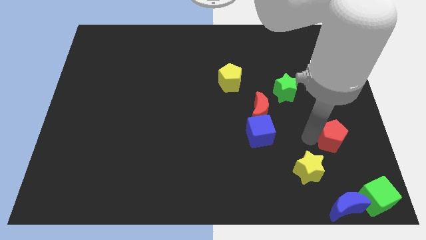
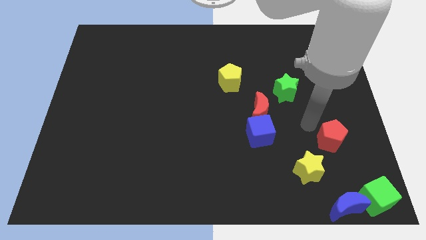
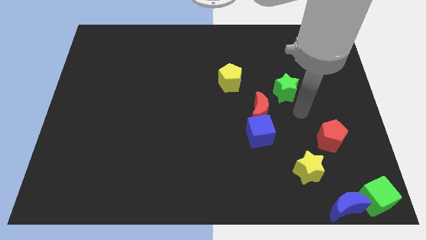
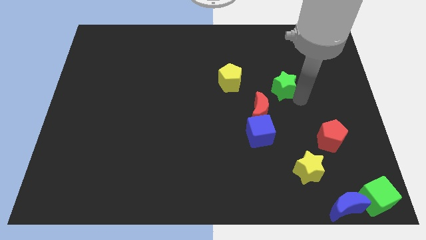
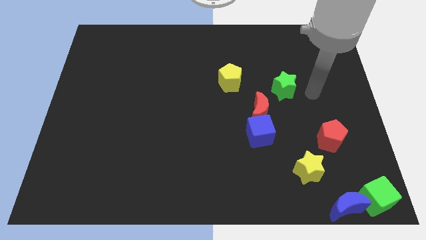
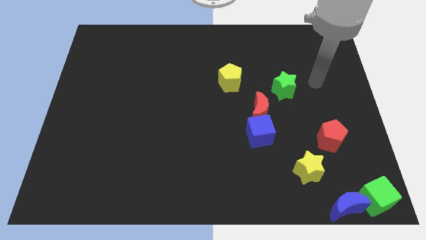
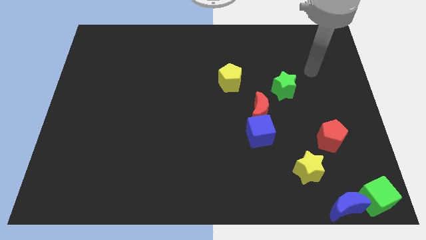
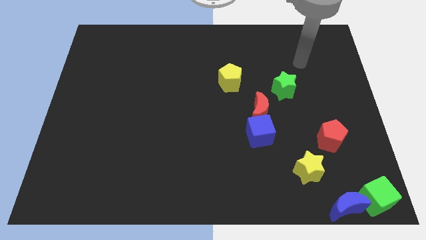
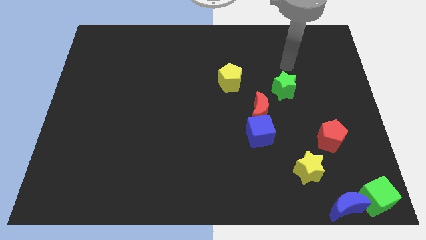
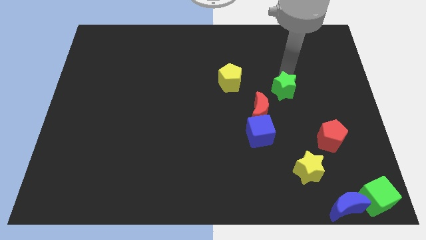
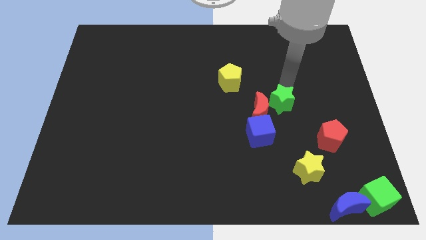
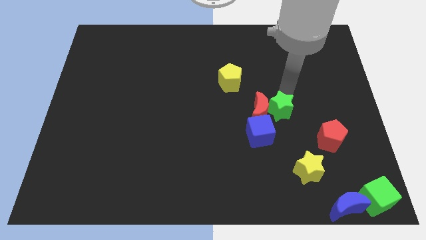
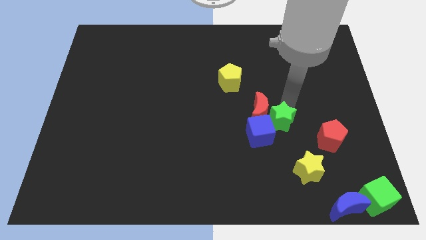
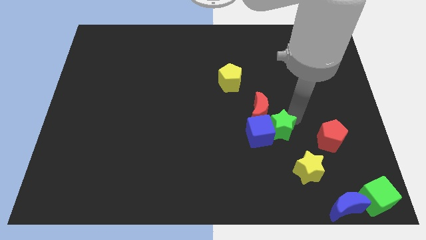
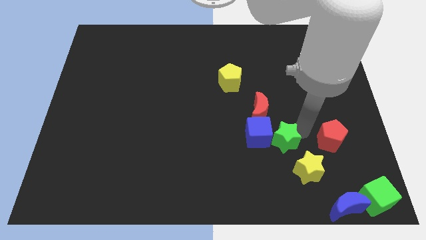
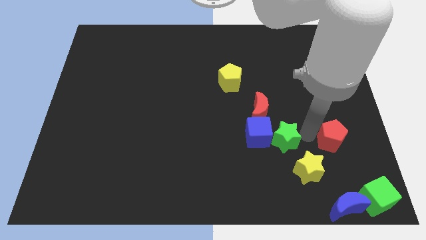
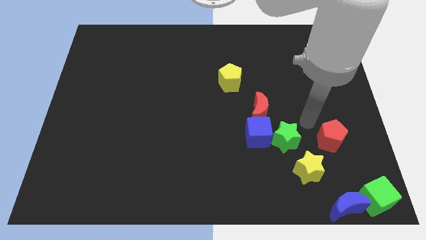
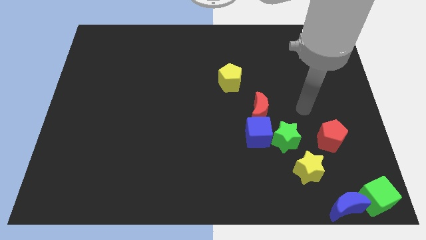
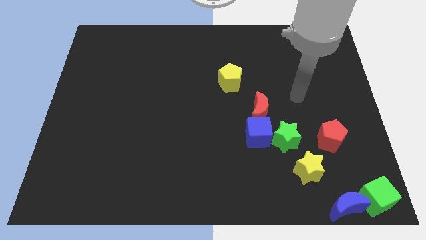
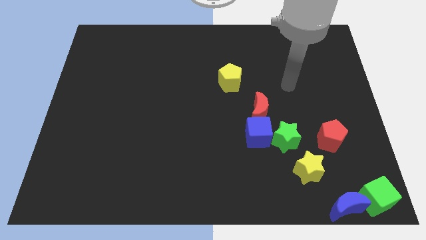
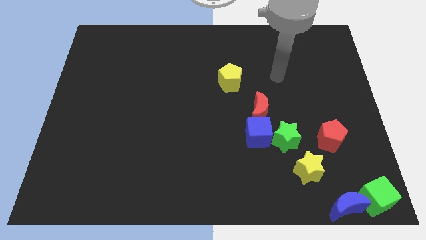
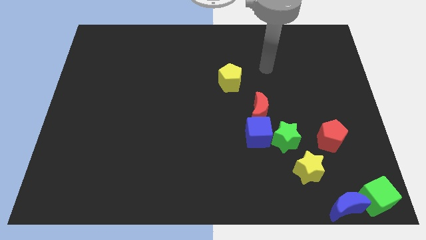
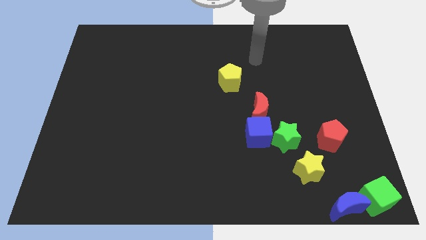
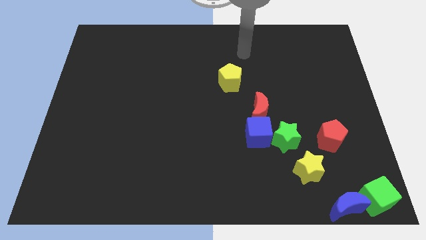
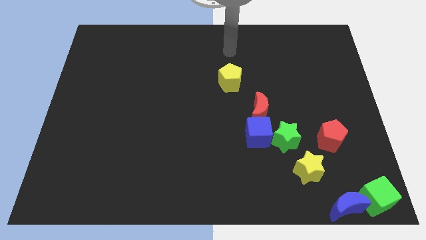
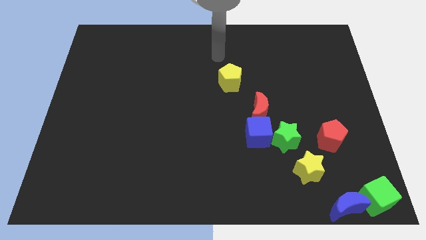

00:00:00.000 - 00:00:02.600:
move the green star into the blue cube

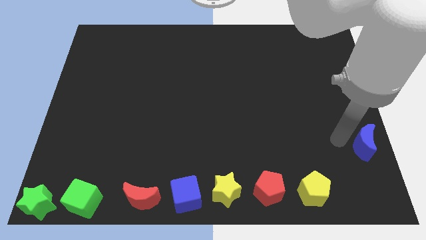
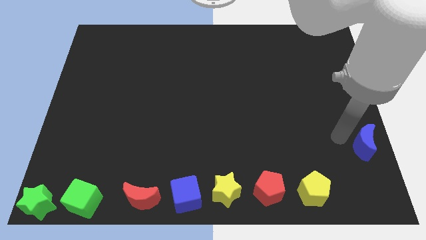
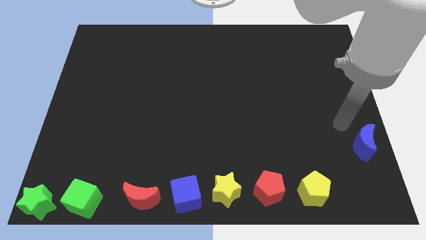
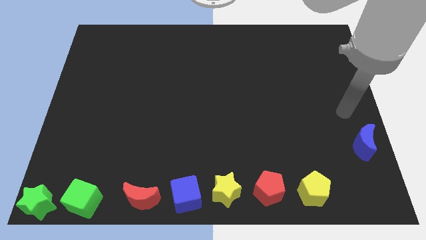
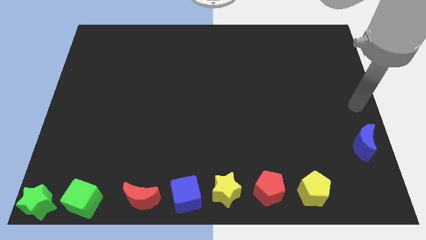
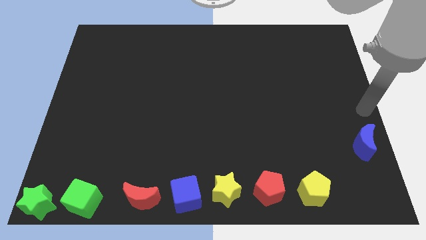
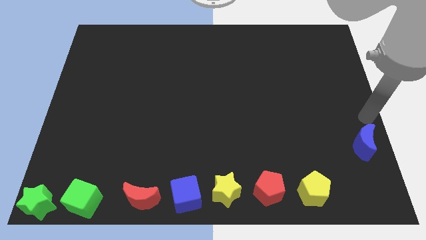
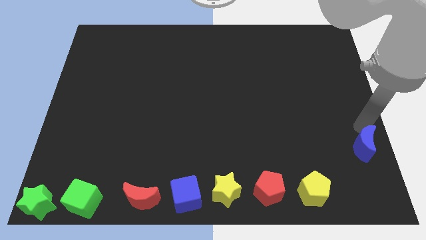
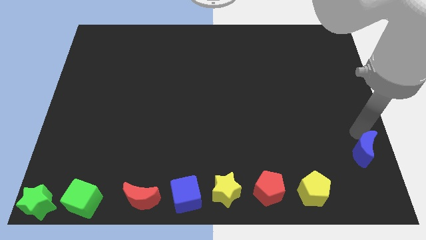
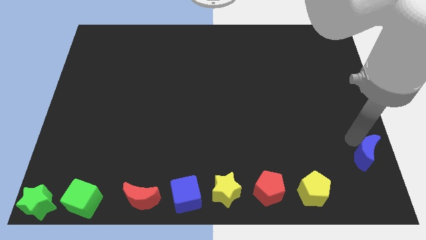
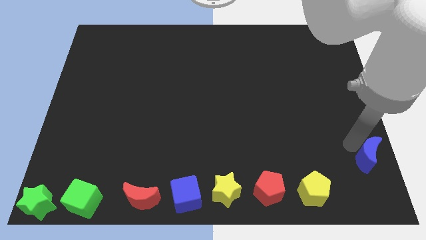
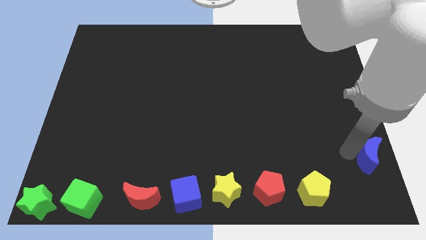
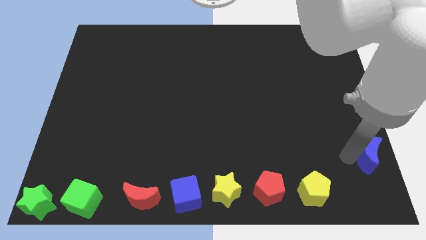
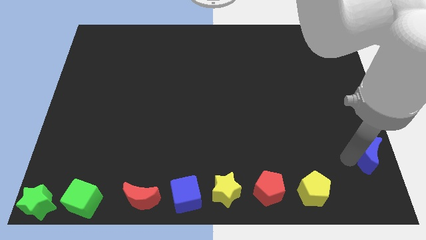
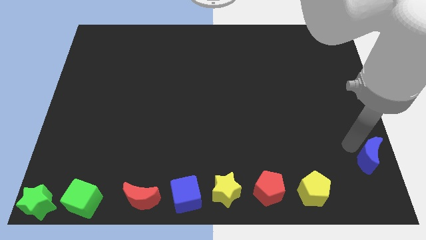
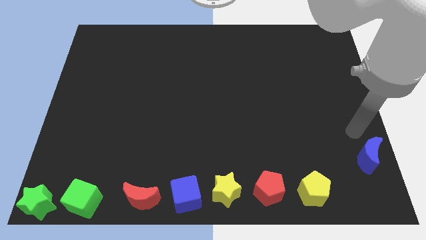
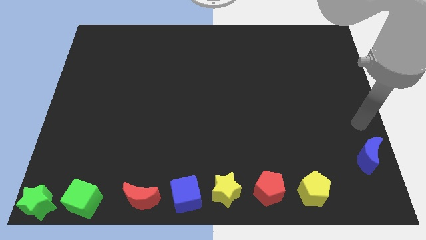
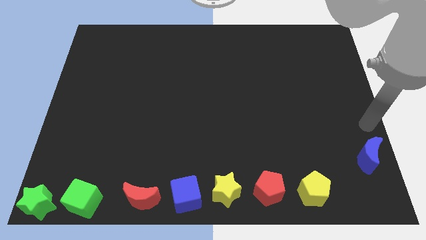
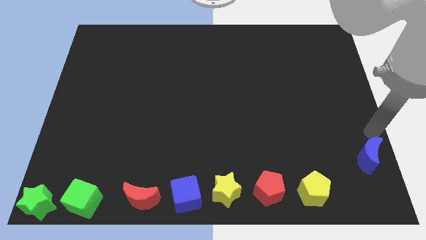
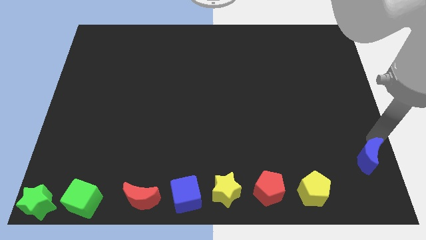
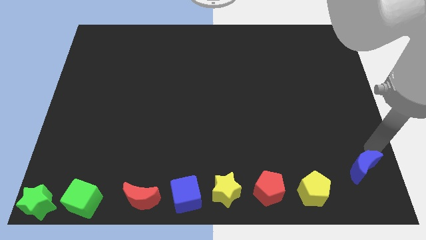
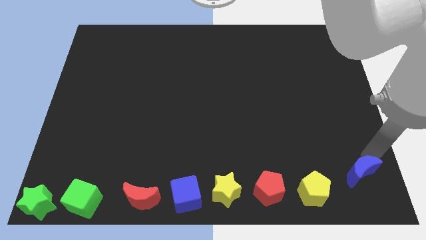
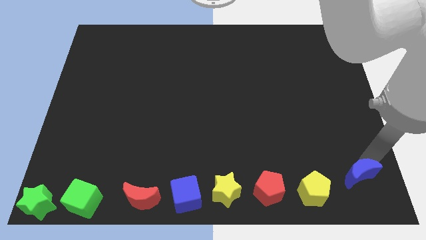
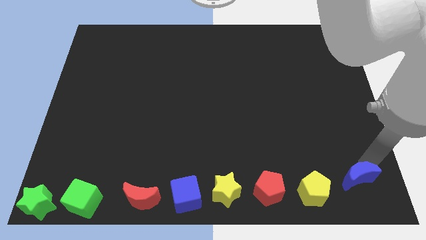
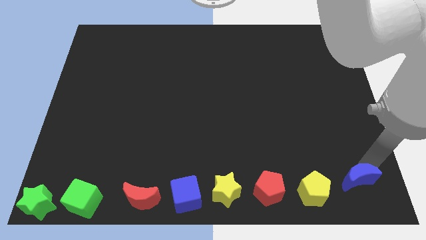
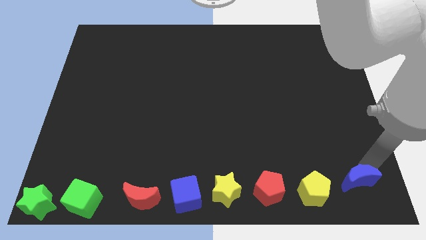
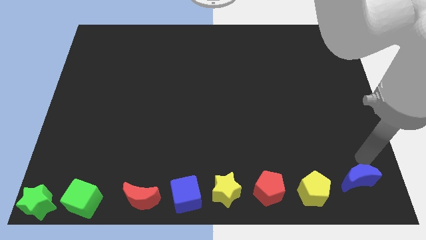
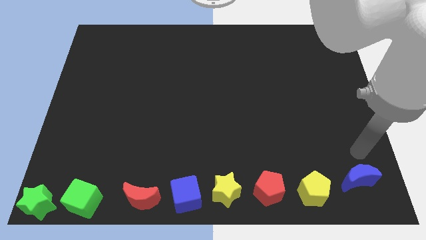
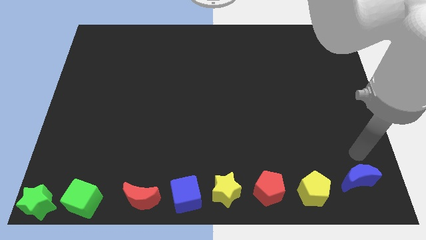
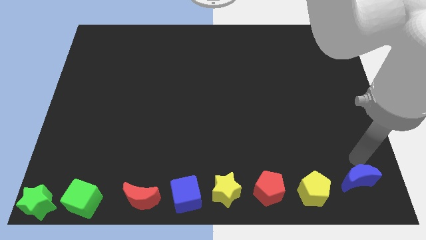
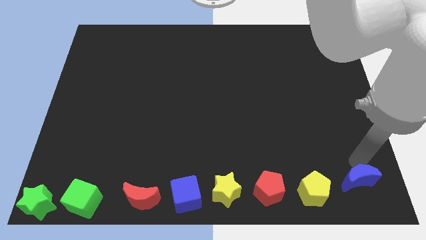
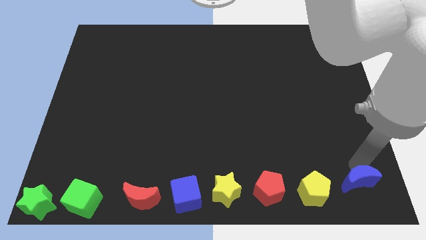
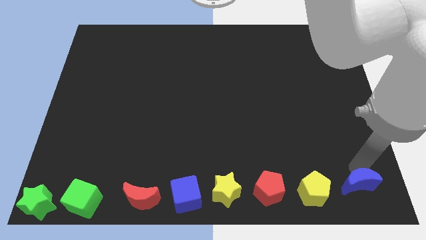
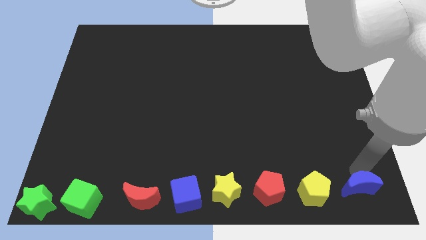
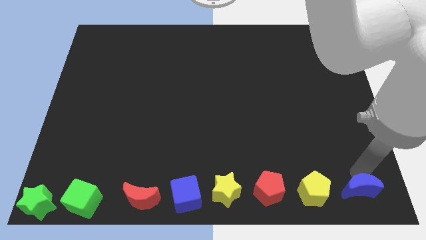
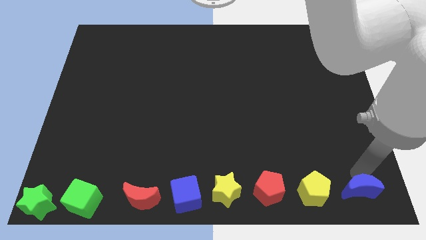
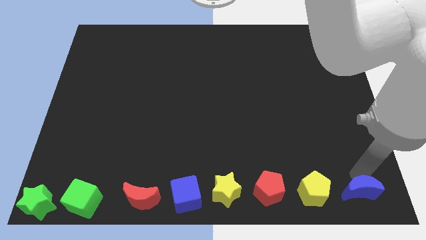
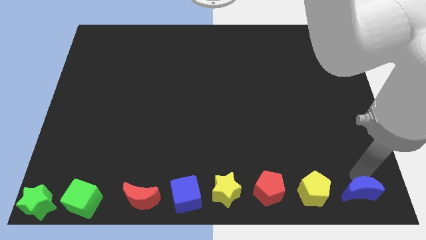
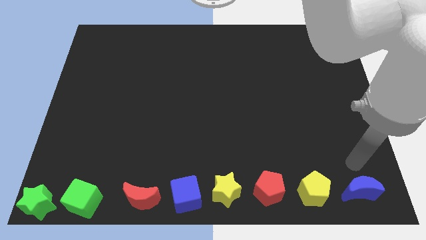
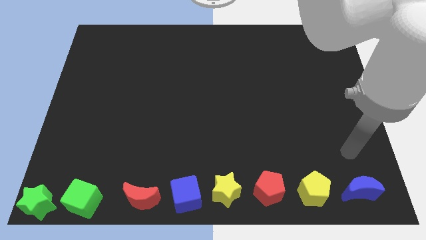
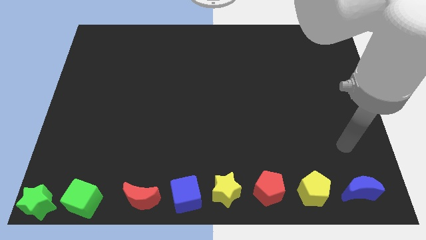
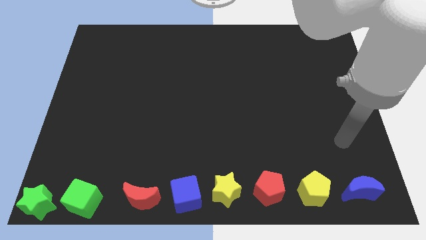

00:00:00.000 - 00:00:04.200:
push the blue moon at the right side of the yellow pentagon

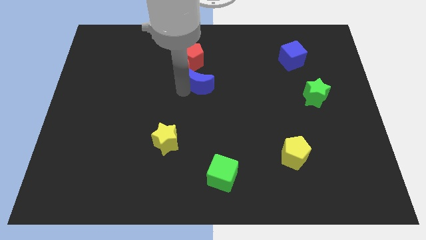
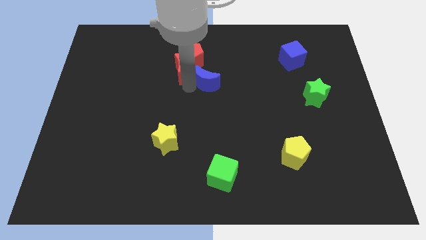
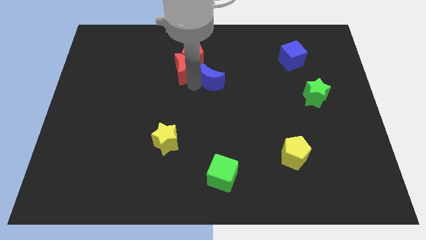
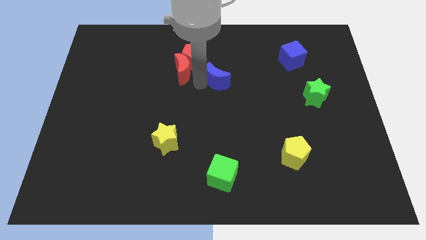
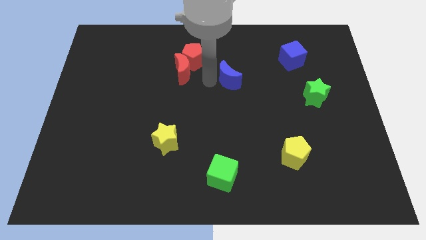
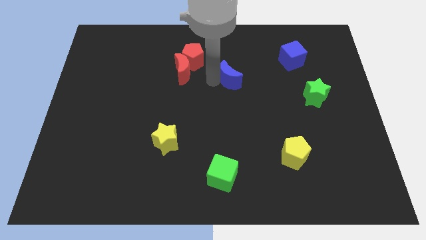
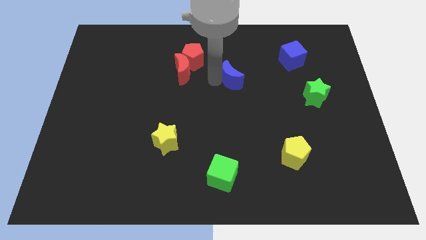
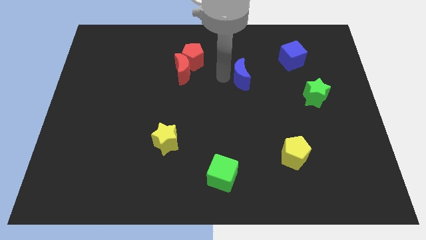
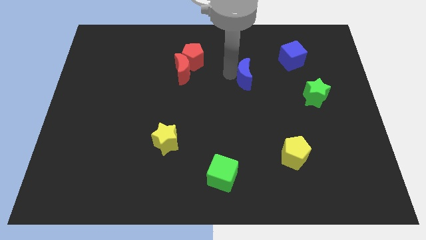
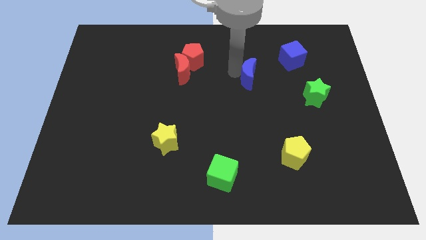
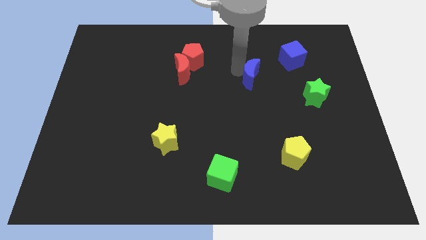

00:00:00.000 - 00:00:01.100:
drag the blue moon to the right

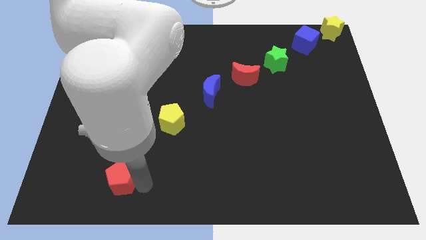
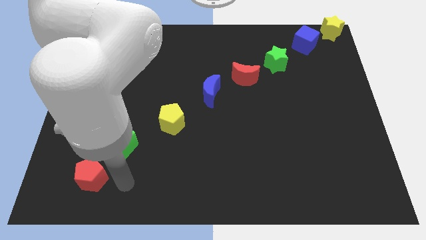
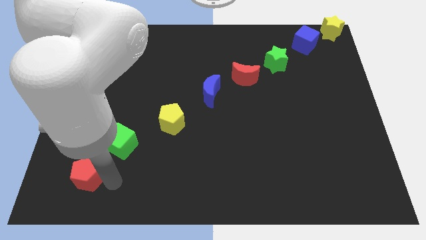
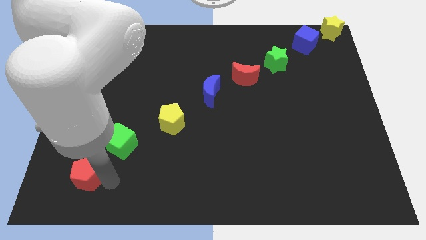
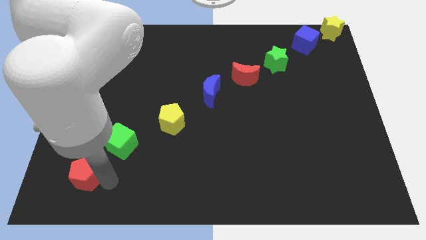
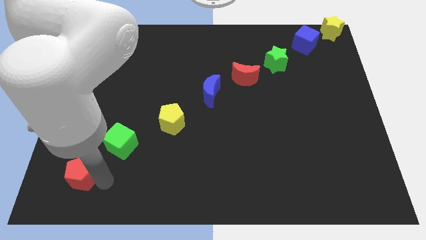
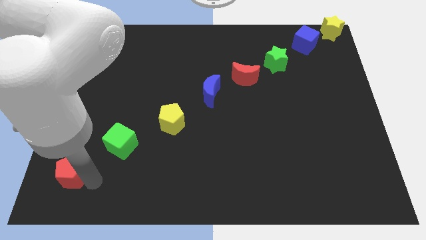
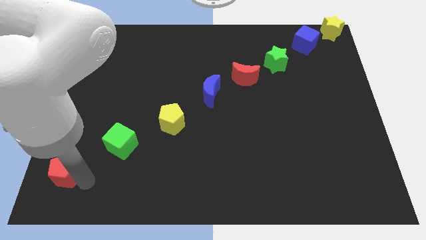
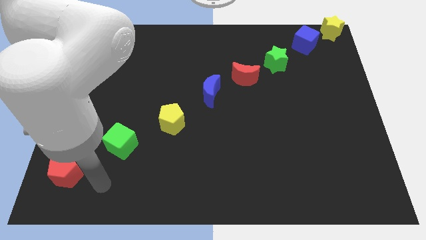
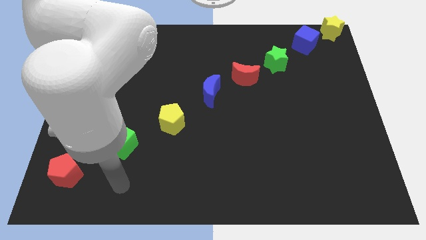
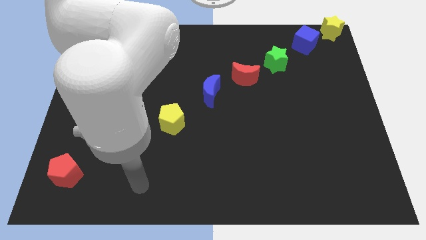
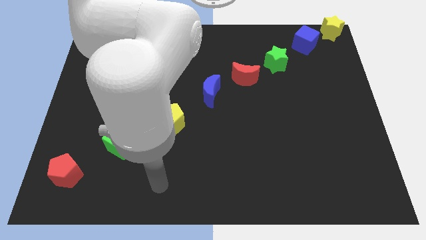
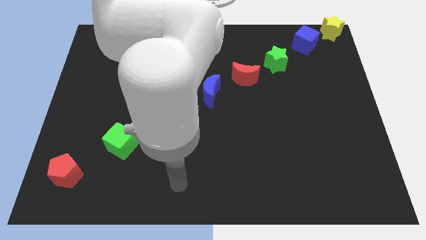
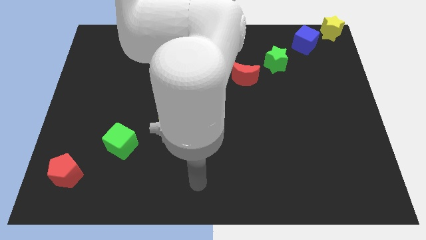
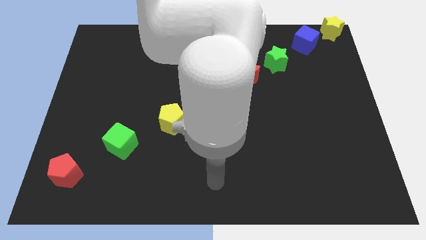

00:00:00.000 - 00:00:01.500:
slide the red pentagon to the bottom left of the green cube
